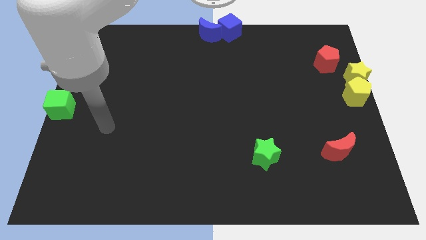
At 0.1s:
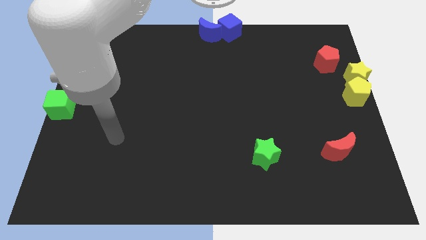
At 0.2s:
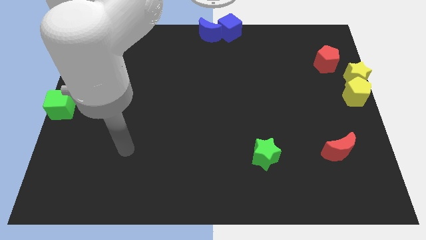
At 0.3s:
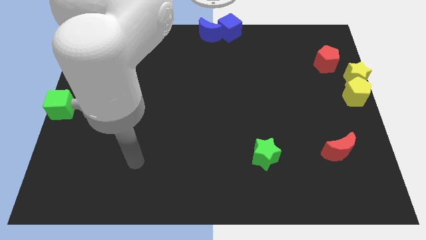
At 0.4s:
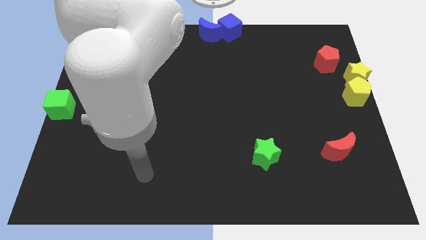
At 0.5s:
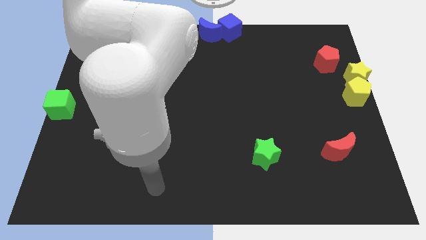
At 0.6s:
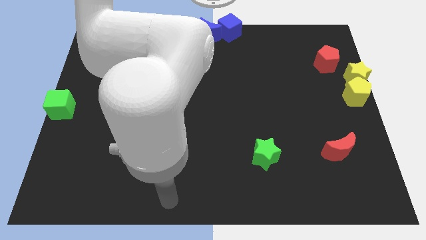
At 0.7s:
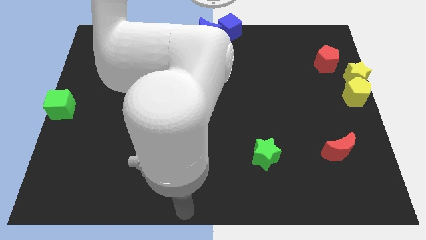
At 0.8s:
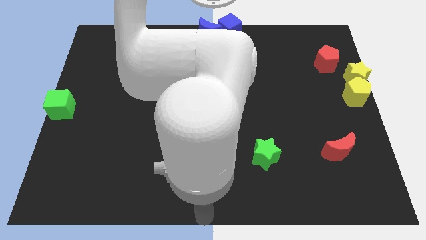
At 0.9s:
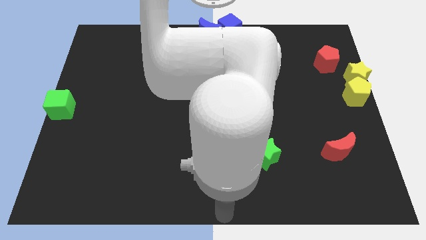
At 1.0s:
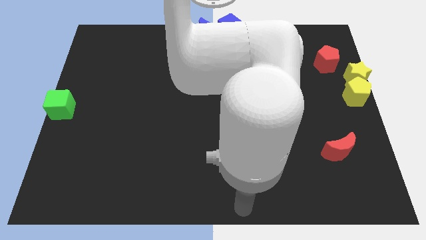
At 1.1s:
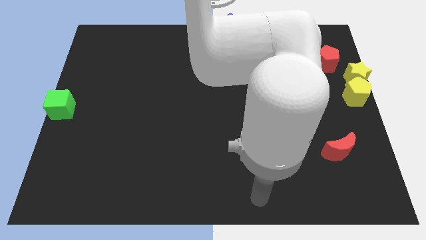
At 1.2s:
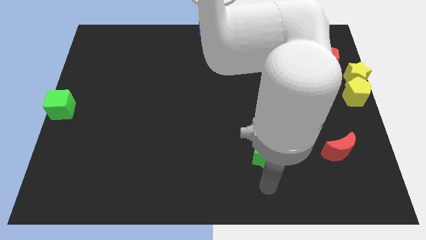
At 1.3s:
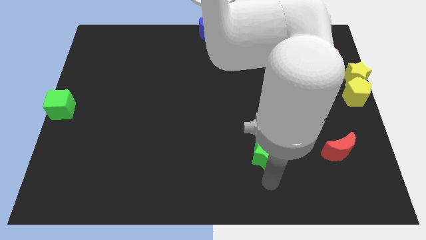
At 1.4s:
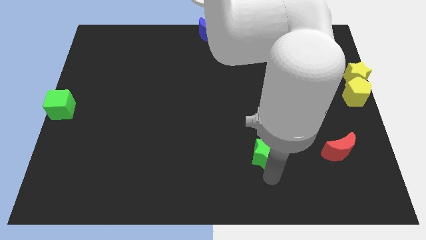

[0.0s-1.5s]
move the arm to the bottom of green star

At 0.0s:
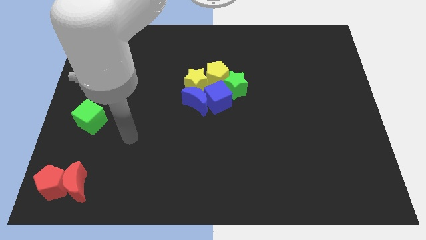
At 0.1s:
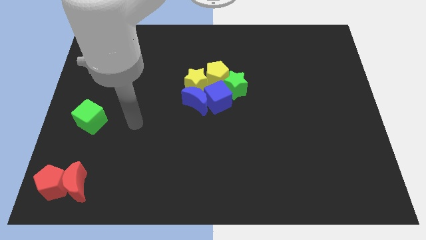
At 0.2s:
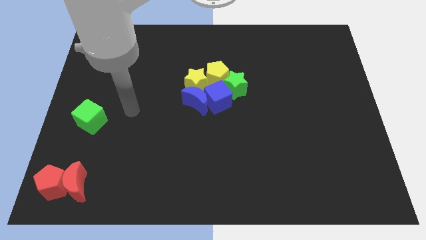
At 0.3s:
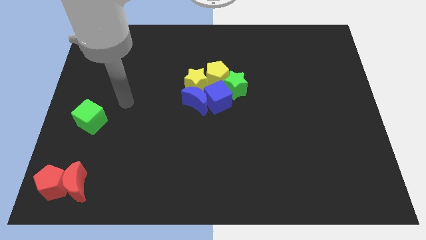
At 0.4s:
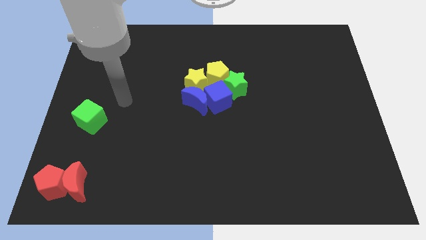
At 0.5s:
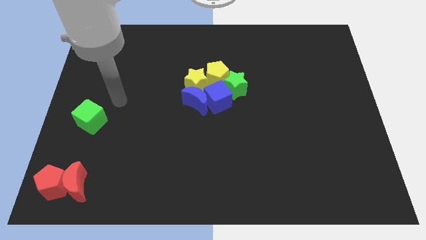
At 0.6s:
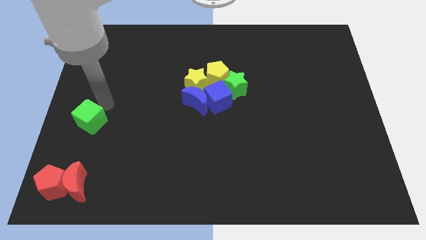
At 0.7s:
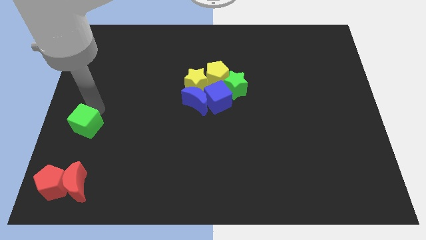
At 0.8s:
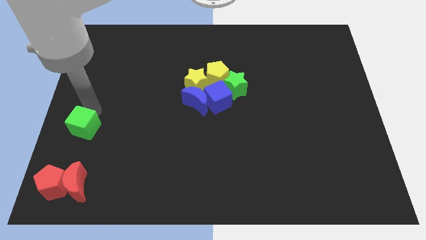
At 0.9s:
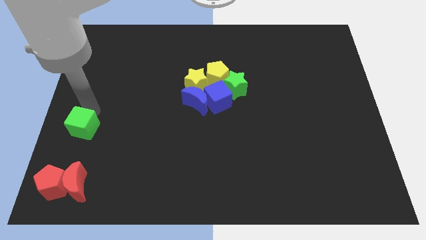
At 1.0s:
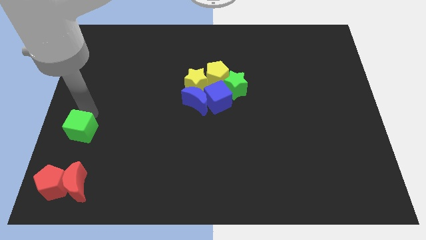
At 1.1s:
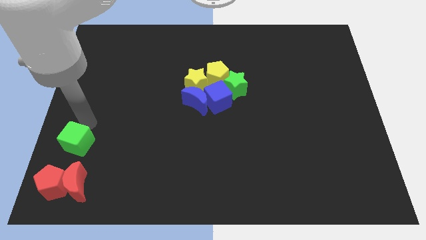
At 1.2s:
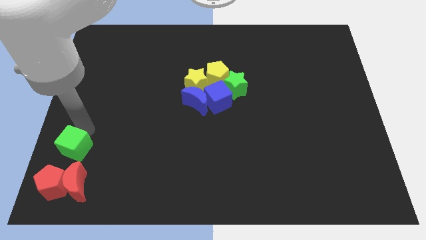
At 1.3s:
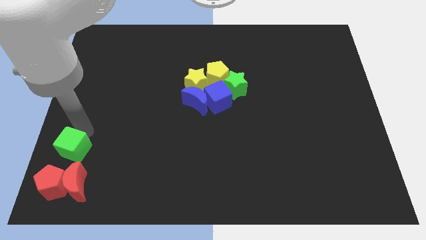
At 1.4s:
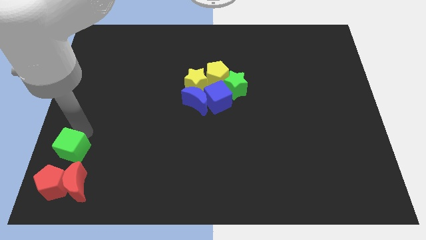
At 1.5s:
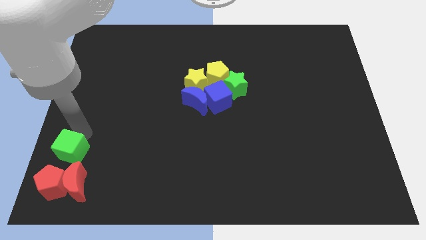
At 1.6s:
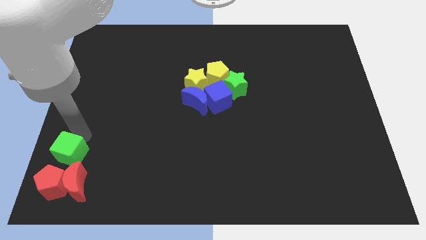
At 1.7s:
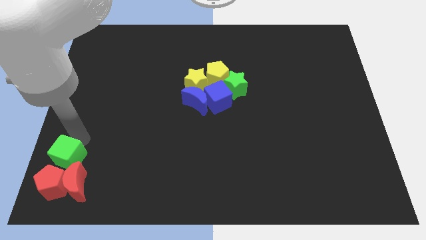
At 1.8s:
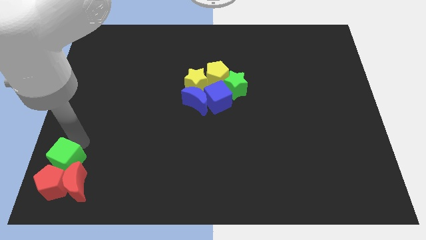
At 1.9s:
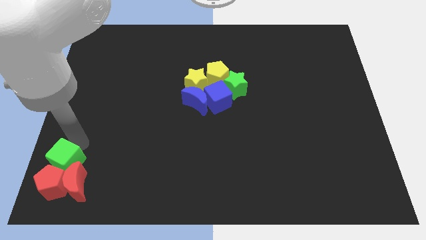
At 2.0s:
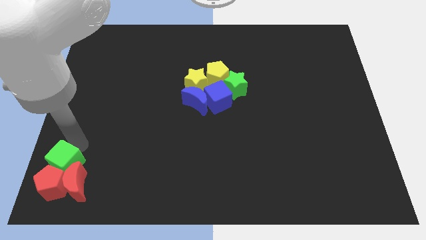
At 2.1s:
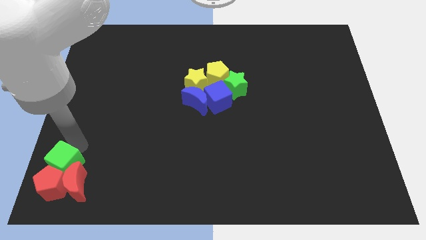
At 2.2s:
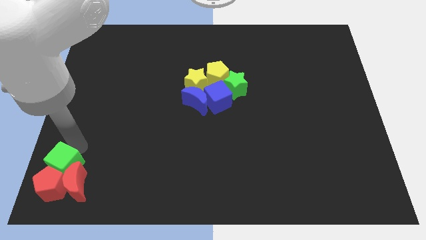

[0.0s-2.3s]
move the green cube above the red blocks

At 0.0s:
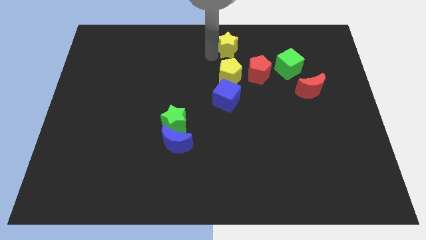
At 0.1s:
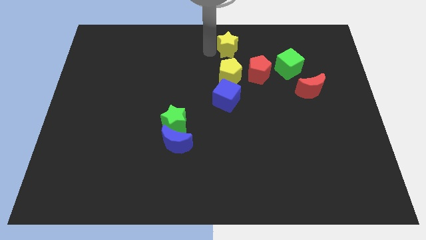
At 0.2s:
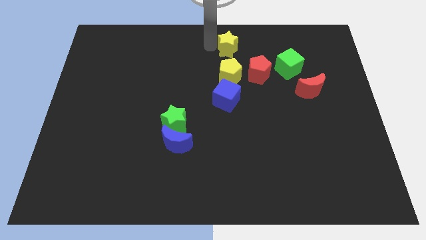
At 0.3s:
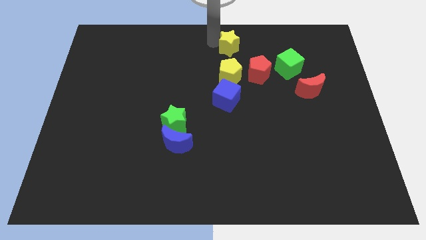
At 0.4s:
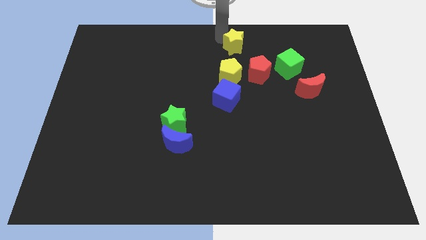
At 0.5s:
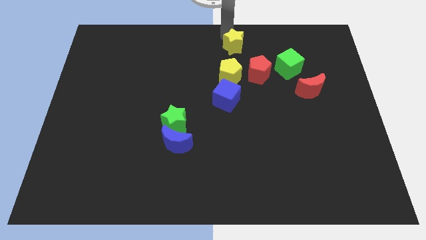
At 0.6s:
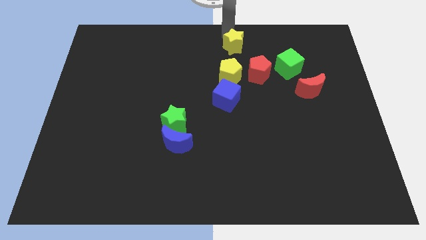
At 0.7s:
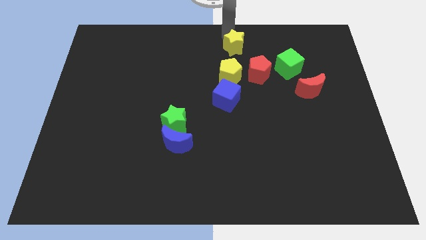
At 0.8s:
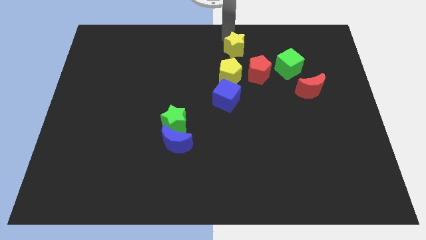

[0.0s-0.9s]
move the yellow star to the top center of the board

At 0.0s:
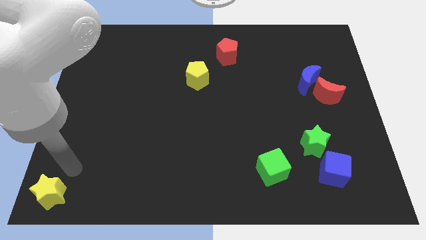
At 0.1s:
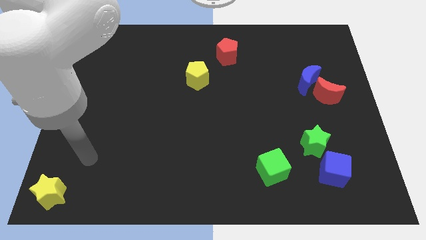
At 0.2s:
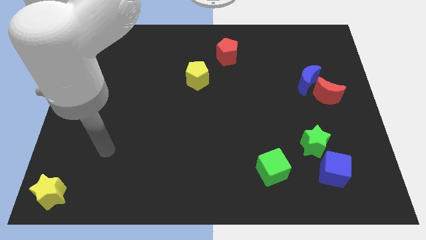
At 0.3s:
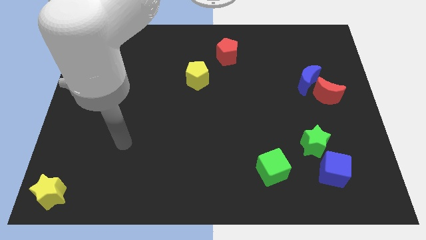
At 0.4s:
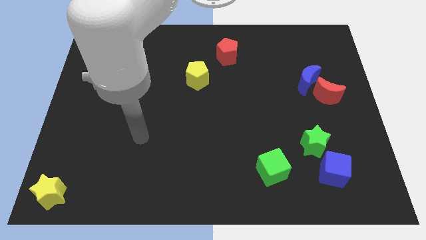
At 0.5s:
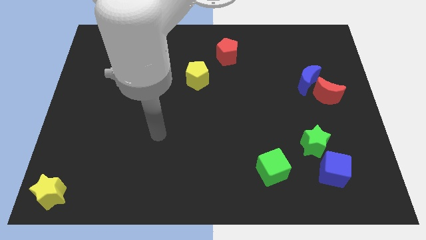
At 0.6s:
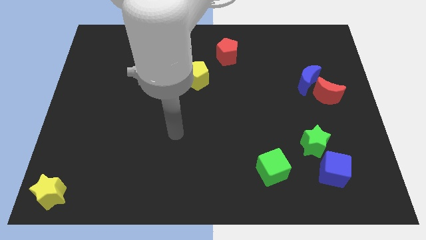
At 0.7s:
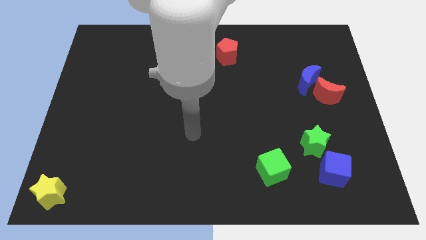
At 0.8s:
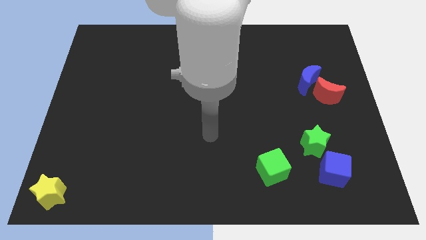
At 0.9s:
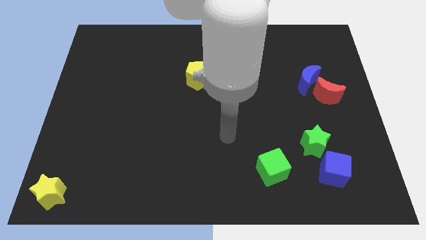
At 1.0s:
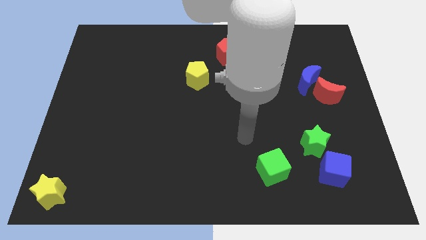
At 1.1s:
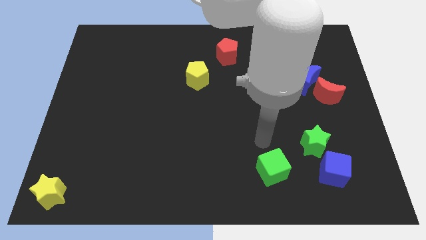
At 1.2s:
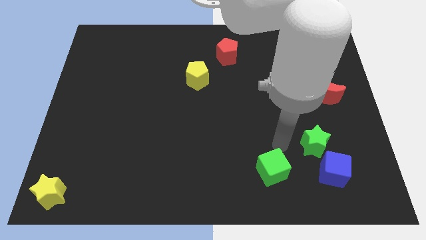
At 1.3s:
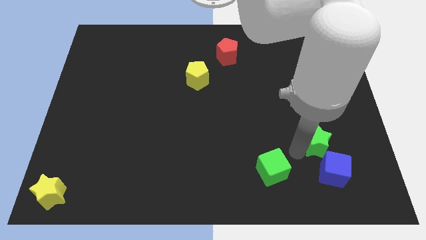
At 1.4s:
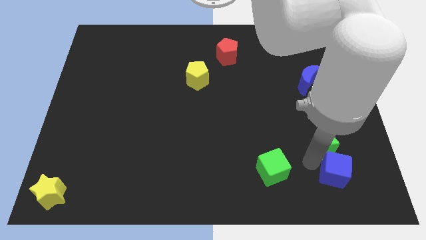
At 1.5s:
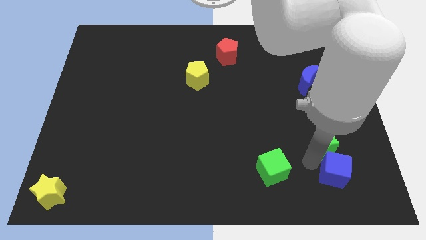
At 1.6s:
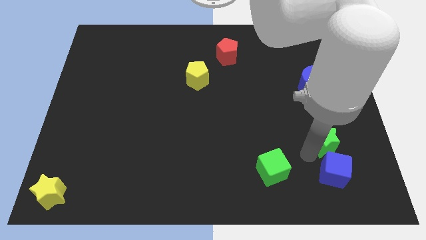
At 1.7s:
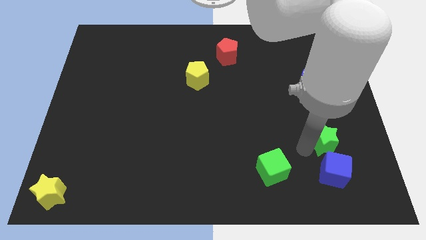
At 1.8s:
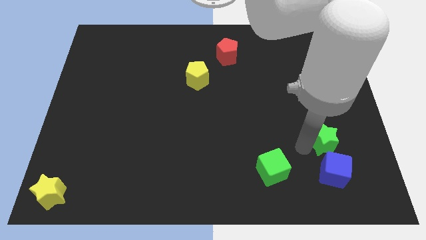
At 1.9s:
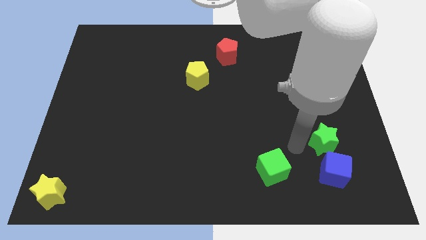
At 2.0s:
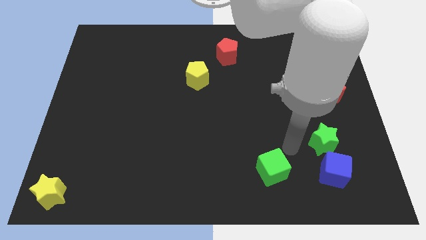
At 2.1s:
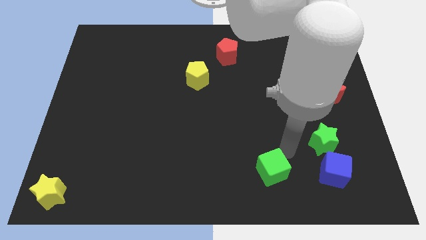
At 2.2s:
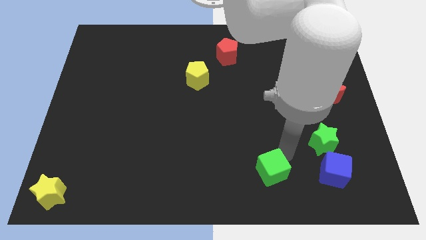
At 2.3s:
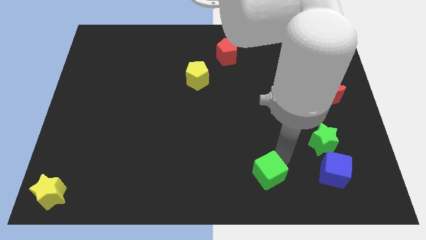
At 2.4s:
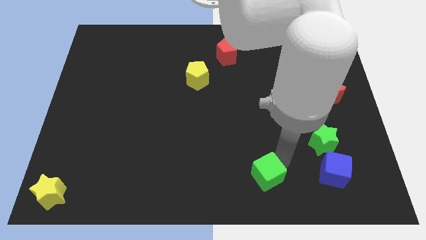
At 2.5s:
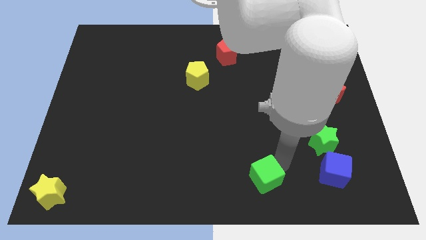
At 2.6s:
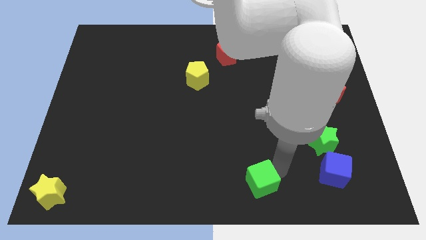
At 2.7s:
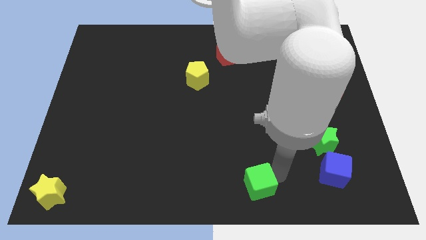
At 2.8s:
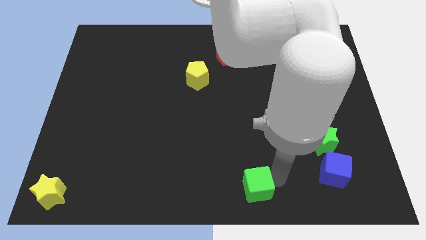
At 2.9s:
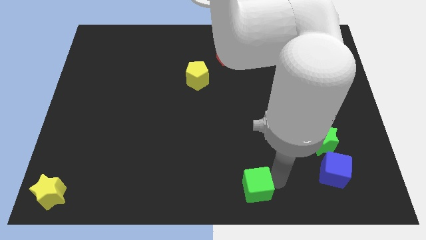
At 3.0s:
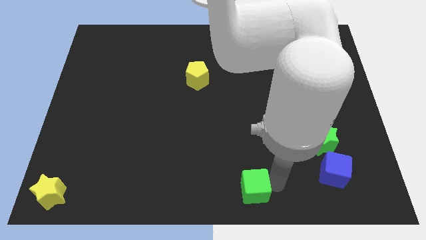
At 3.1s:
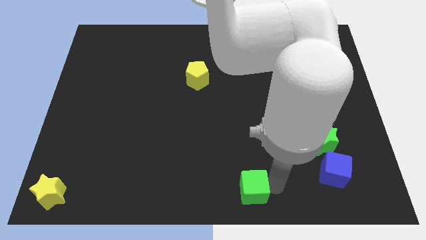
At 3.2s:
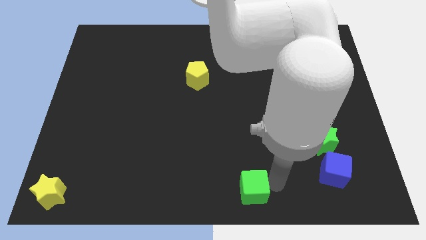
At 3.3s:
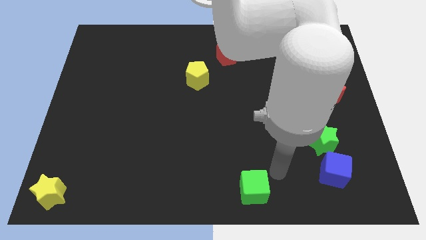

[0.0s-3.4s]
move your hand away from the yellow star

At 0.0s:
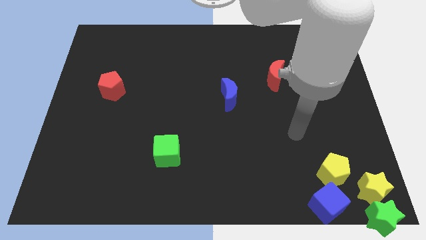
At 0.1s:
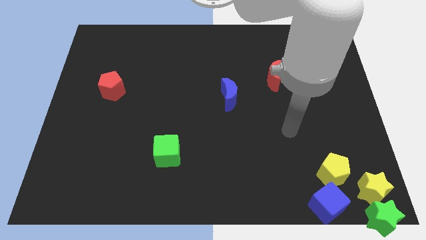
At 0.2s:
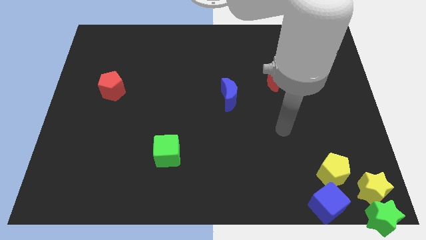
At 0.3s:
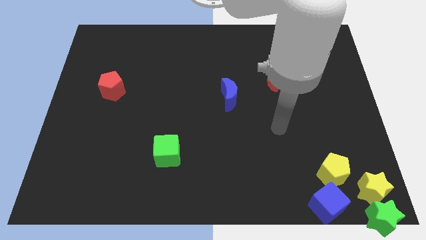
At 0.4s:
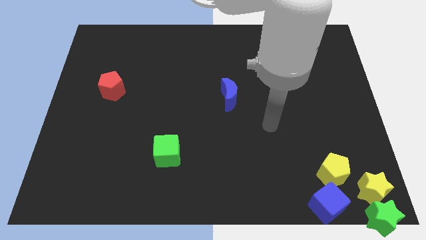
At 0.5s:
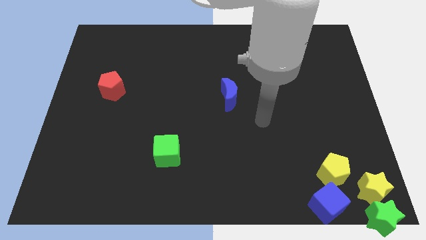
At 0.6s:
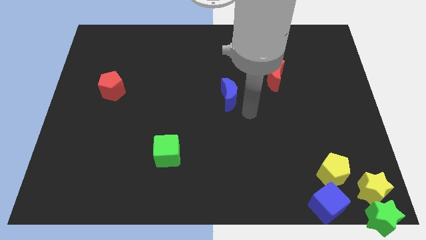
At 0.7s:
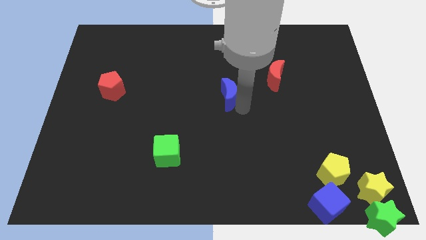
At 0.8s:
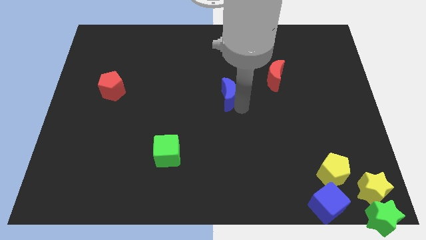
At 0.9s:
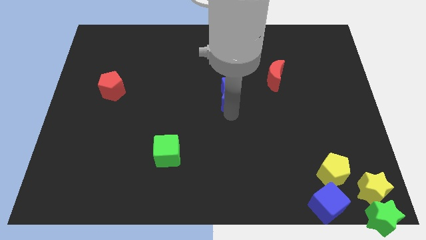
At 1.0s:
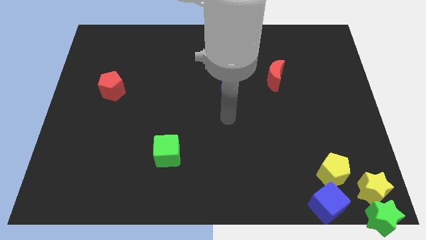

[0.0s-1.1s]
touch the bottom of blue crescent
